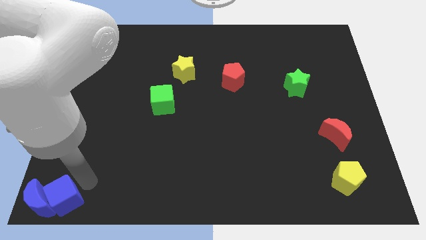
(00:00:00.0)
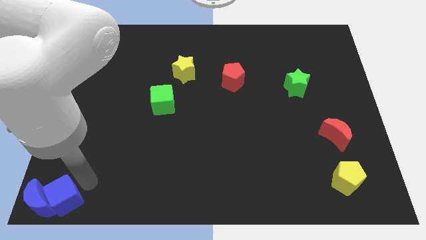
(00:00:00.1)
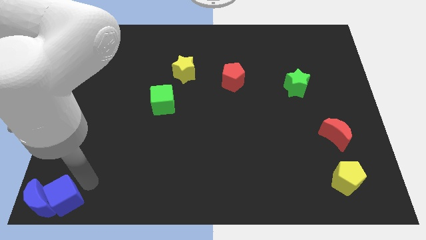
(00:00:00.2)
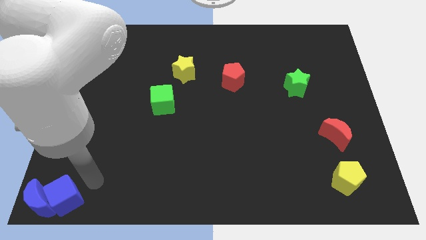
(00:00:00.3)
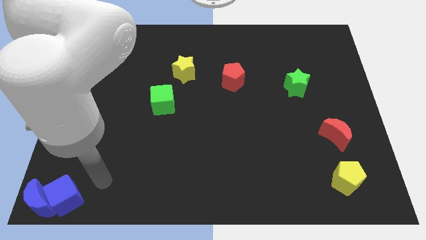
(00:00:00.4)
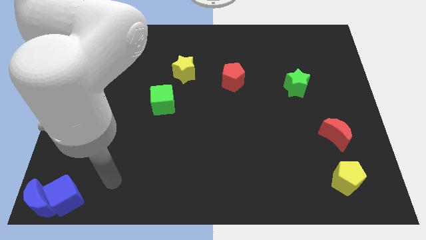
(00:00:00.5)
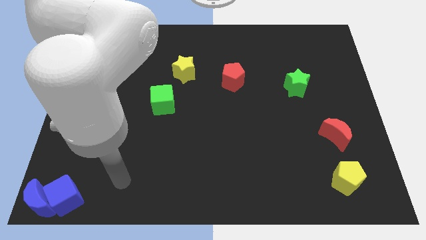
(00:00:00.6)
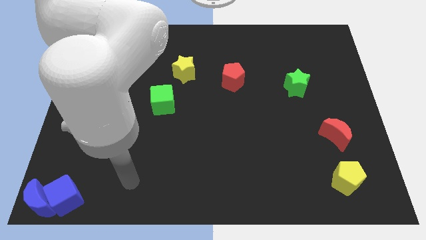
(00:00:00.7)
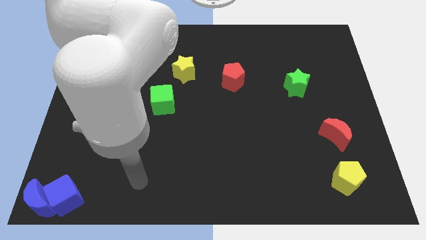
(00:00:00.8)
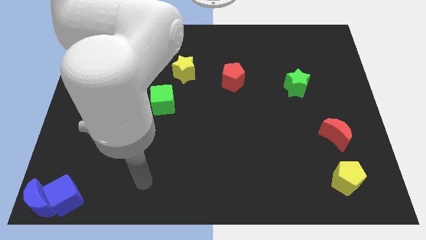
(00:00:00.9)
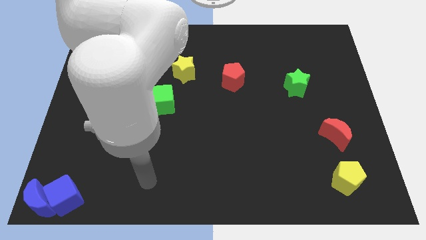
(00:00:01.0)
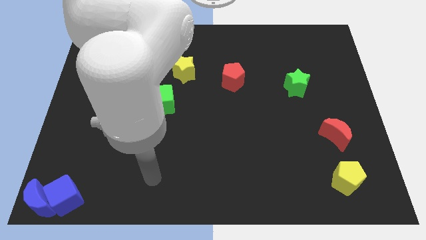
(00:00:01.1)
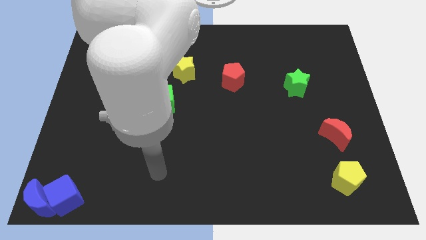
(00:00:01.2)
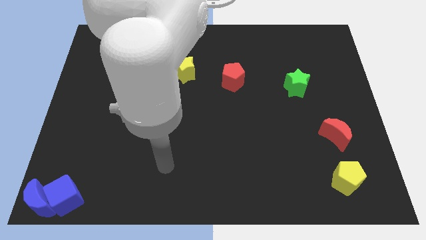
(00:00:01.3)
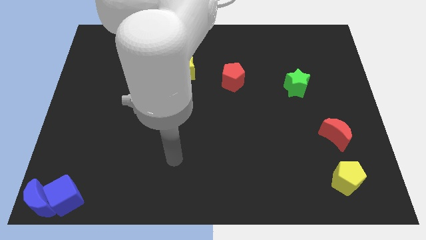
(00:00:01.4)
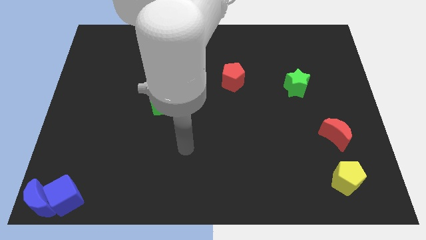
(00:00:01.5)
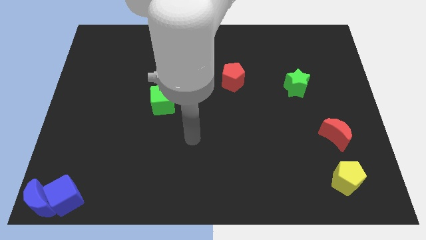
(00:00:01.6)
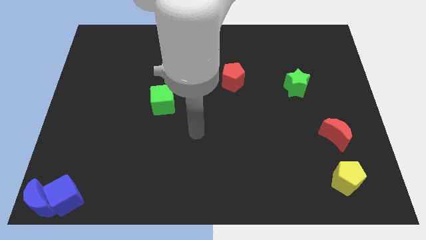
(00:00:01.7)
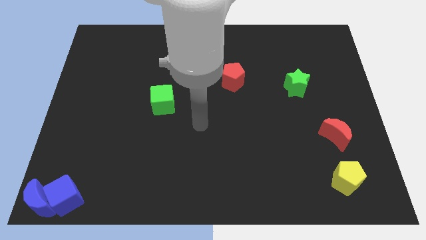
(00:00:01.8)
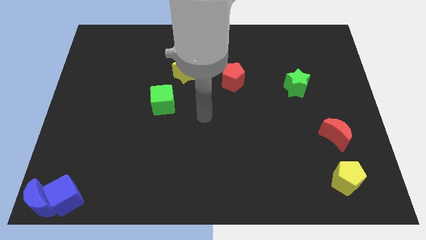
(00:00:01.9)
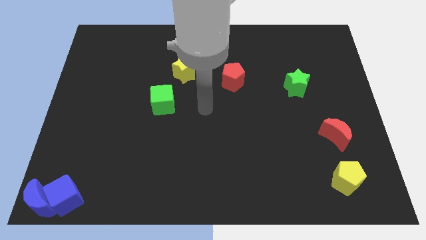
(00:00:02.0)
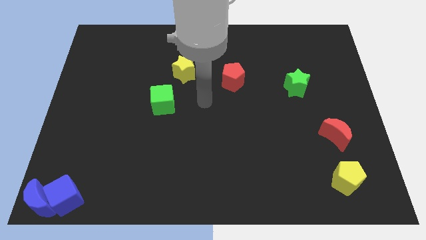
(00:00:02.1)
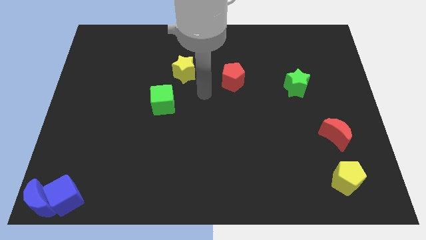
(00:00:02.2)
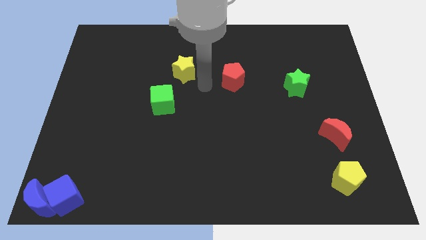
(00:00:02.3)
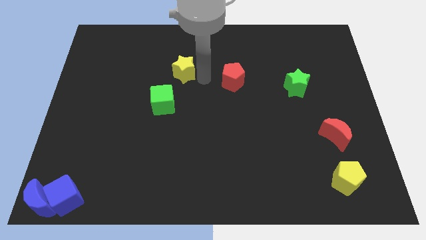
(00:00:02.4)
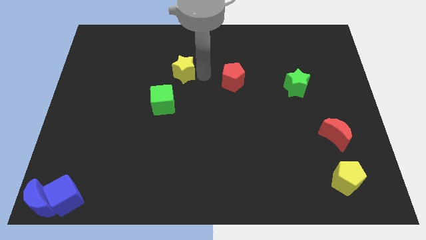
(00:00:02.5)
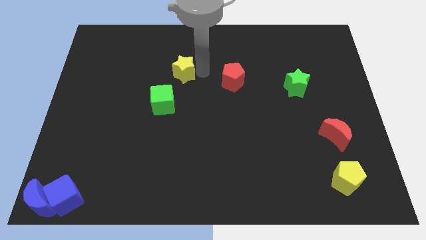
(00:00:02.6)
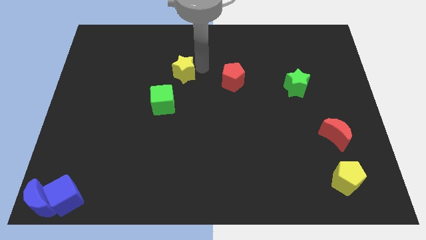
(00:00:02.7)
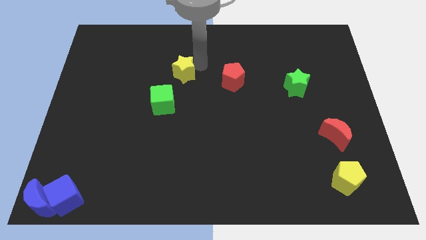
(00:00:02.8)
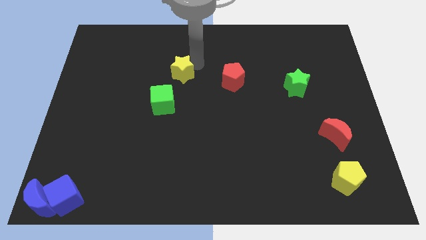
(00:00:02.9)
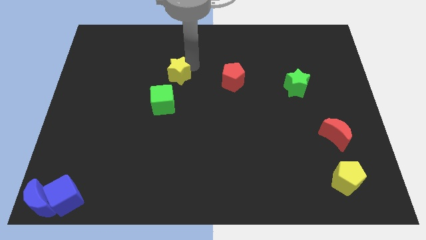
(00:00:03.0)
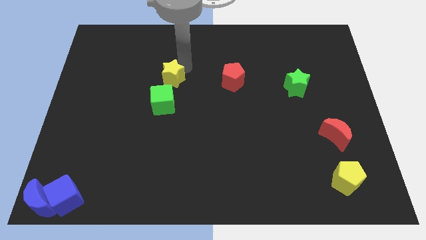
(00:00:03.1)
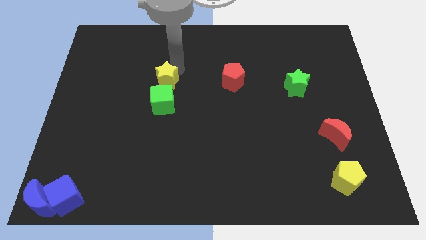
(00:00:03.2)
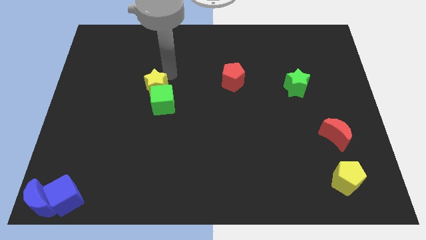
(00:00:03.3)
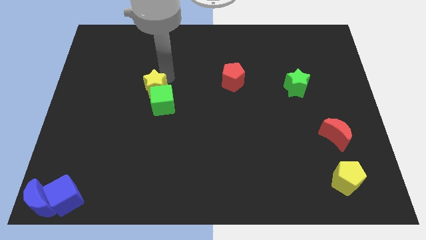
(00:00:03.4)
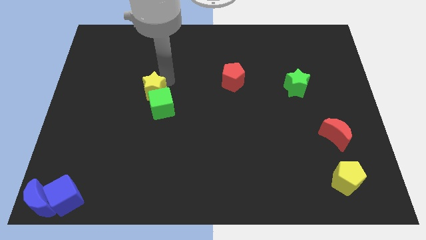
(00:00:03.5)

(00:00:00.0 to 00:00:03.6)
place yellow star above the green cube

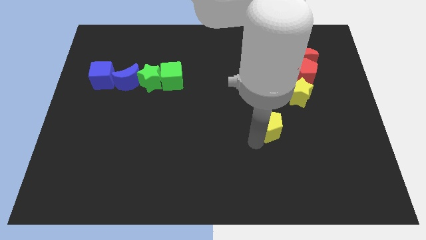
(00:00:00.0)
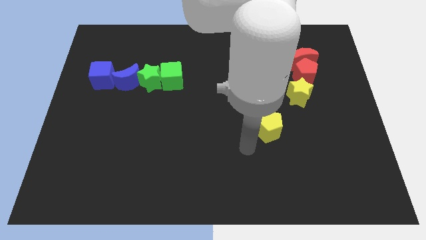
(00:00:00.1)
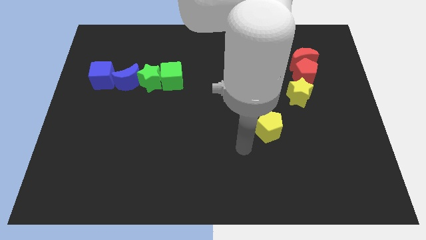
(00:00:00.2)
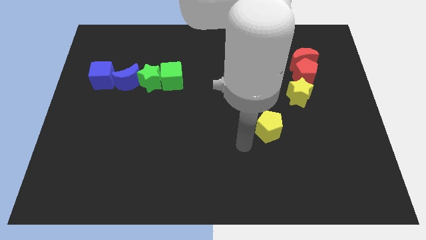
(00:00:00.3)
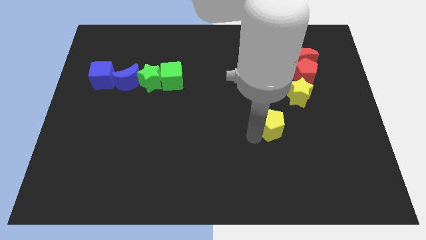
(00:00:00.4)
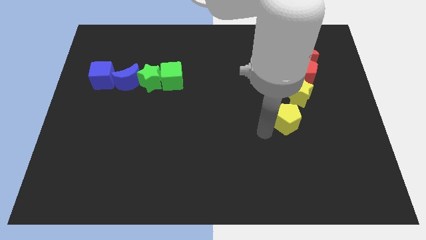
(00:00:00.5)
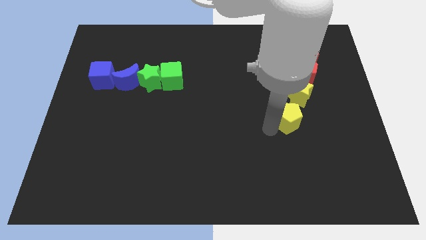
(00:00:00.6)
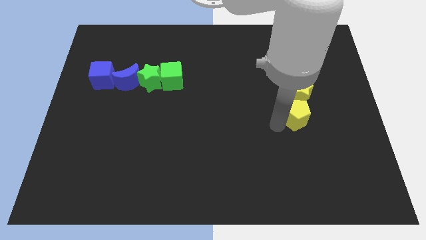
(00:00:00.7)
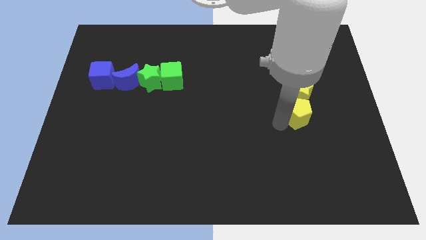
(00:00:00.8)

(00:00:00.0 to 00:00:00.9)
push the yellow pentagon below the yellow star

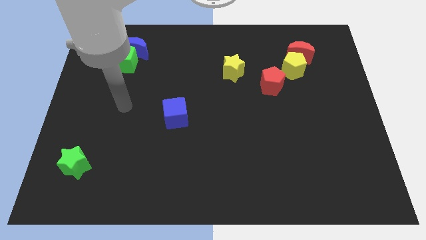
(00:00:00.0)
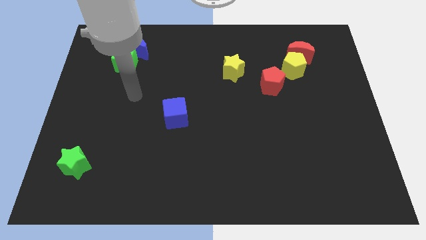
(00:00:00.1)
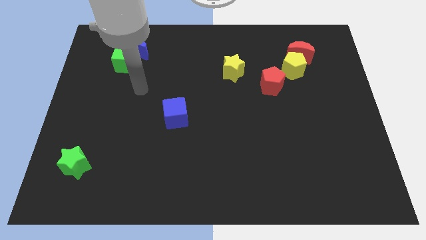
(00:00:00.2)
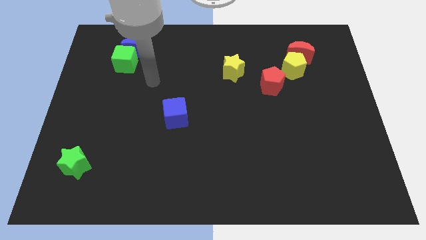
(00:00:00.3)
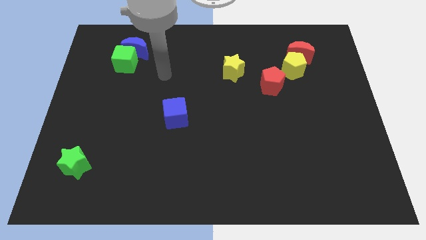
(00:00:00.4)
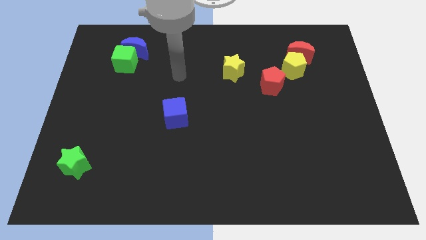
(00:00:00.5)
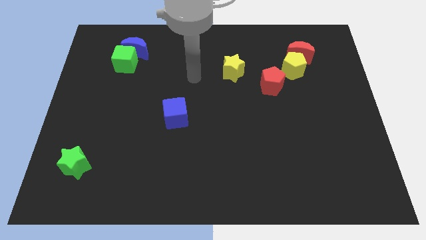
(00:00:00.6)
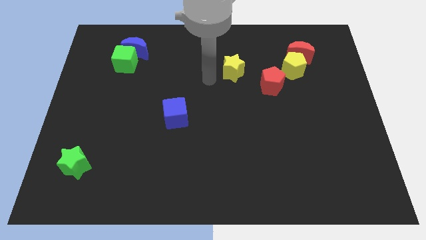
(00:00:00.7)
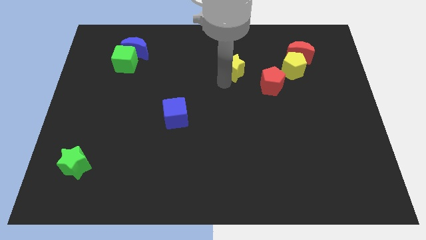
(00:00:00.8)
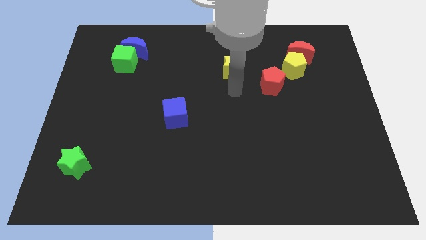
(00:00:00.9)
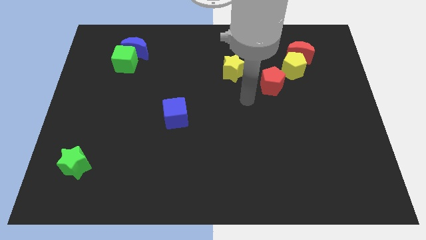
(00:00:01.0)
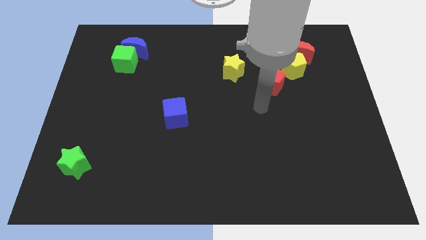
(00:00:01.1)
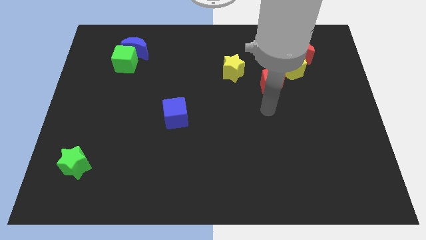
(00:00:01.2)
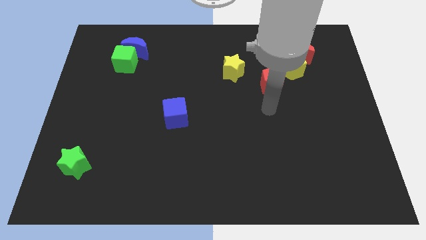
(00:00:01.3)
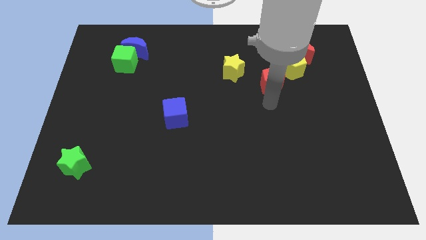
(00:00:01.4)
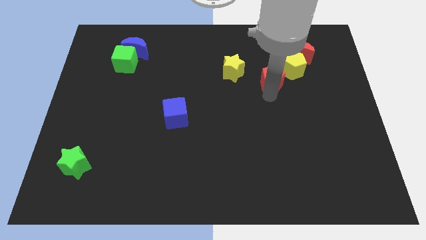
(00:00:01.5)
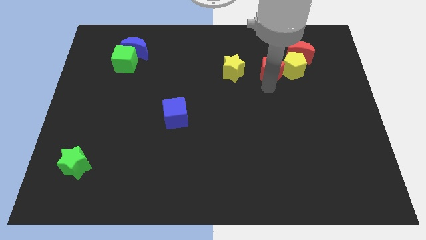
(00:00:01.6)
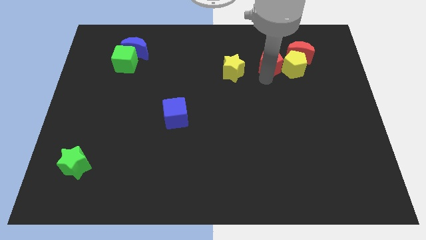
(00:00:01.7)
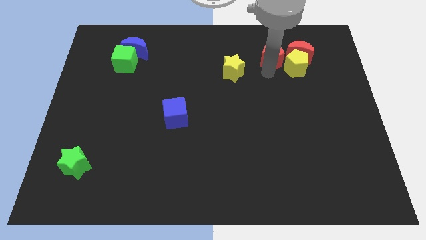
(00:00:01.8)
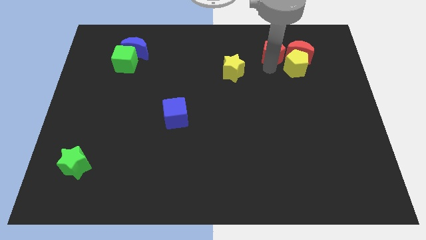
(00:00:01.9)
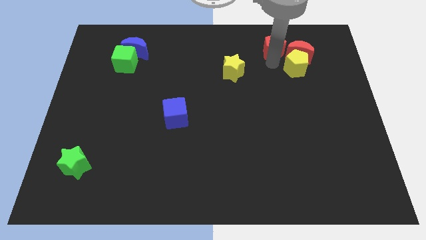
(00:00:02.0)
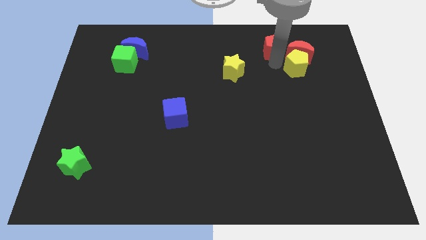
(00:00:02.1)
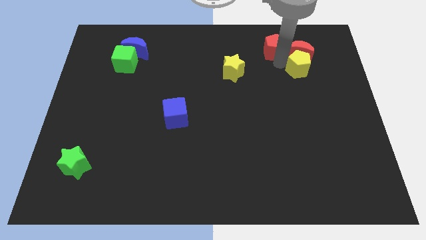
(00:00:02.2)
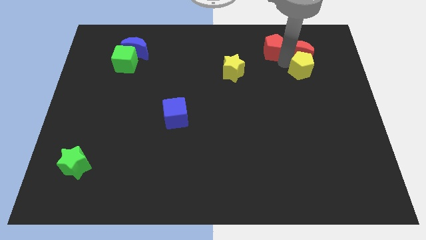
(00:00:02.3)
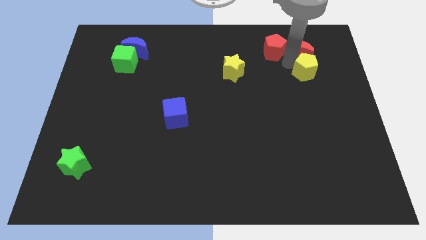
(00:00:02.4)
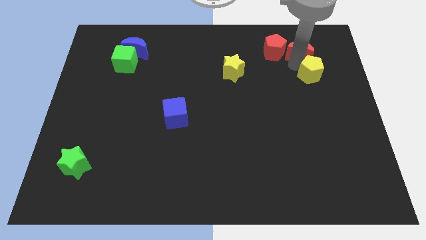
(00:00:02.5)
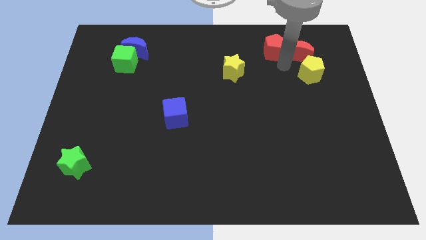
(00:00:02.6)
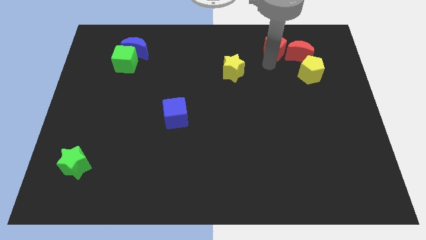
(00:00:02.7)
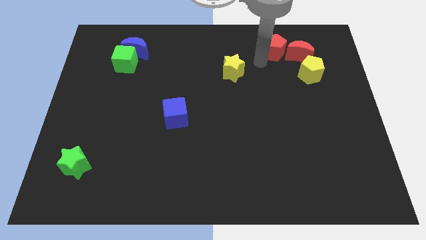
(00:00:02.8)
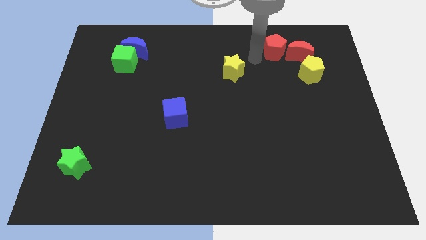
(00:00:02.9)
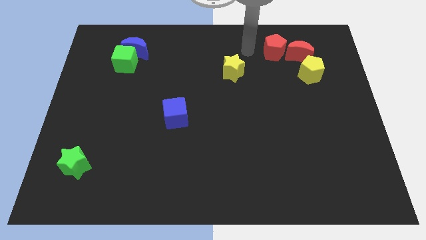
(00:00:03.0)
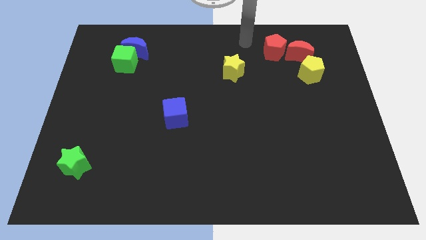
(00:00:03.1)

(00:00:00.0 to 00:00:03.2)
place the red pentagon left to the red crescent

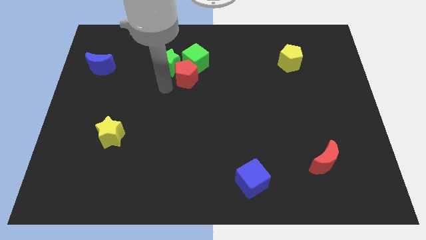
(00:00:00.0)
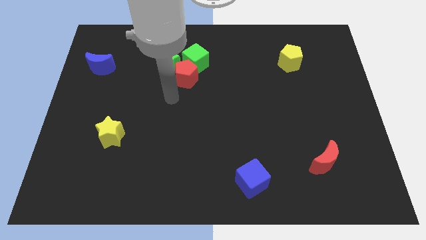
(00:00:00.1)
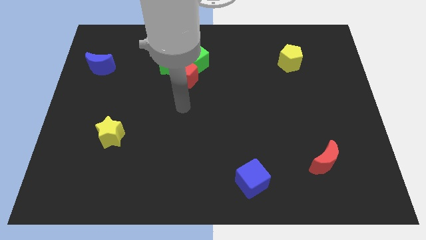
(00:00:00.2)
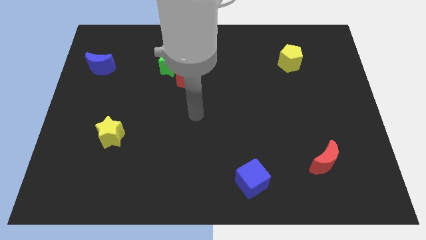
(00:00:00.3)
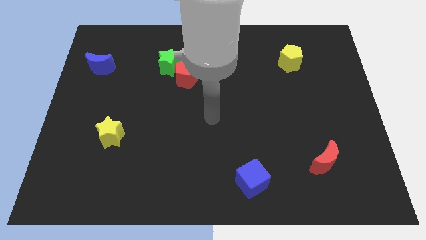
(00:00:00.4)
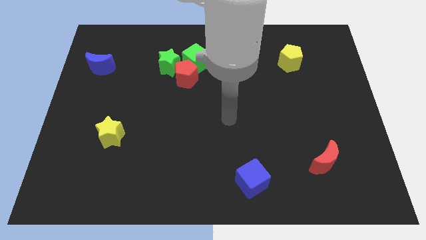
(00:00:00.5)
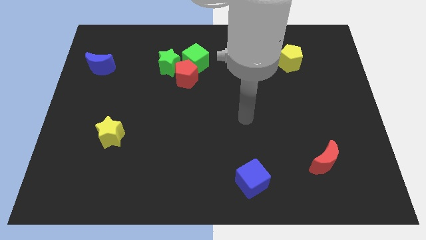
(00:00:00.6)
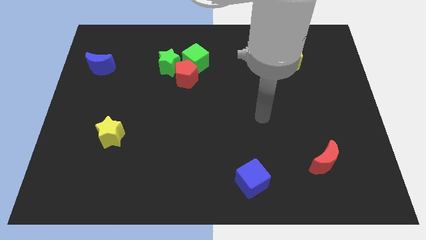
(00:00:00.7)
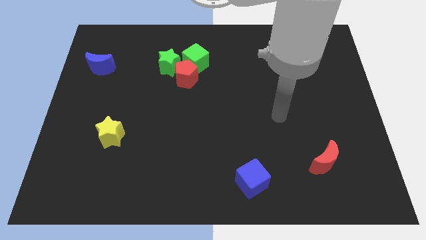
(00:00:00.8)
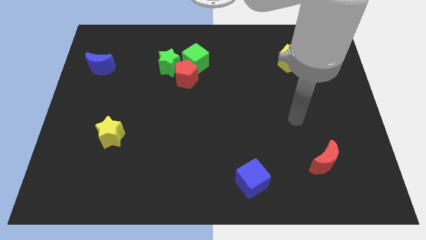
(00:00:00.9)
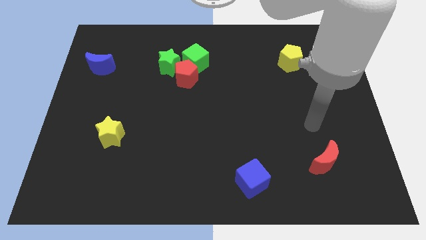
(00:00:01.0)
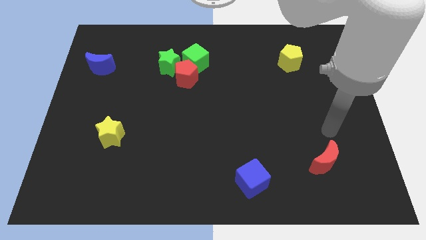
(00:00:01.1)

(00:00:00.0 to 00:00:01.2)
move arm near red crescent

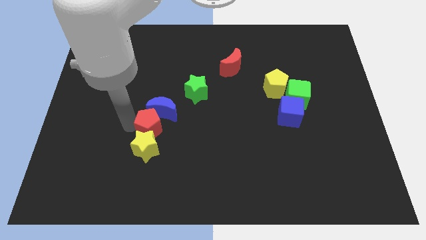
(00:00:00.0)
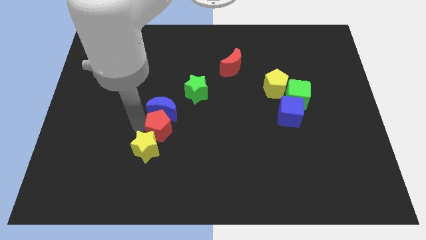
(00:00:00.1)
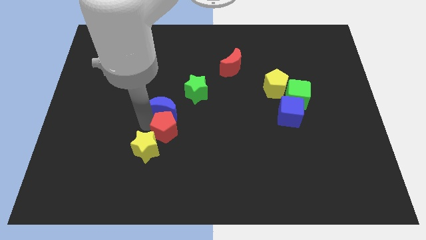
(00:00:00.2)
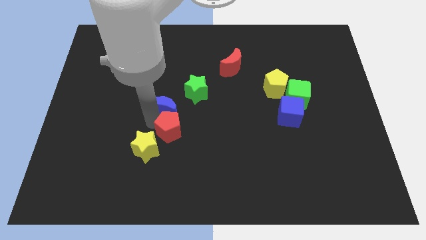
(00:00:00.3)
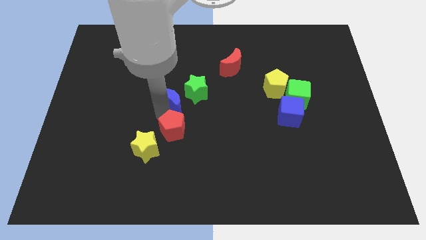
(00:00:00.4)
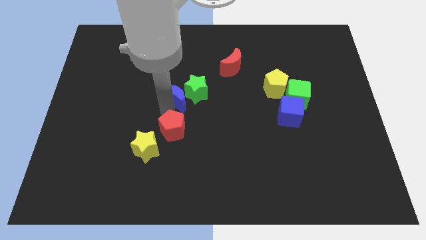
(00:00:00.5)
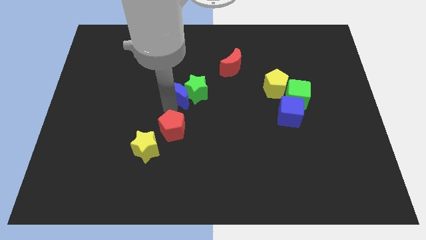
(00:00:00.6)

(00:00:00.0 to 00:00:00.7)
push blue moon towards green star
